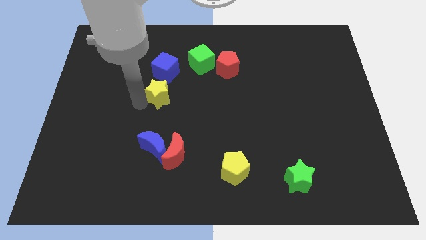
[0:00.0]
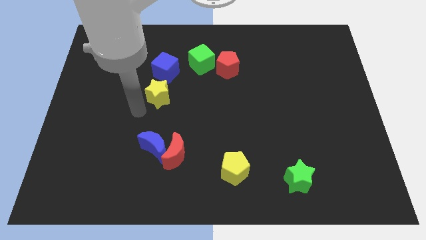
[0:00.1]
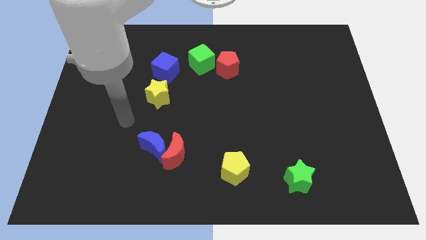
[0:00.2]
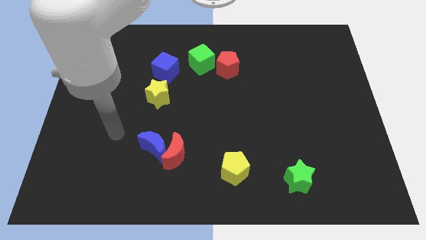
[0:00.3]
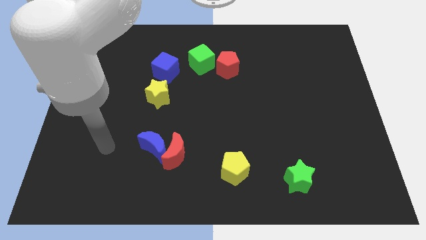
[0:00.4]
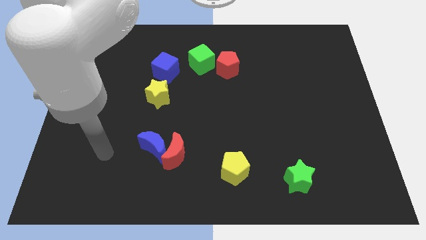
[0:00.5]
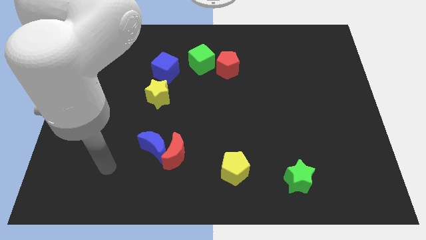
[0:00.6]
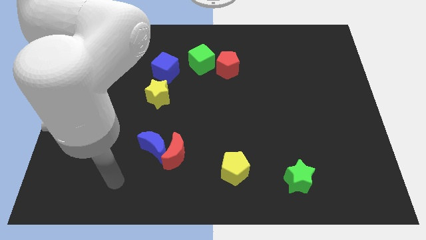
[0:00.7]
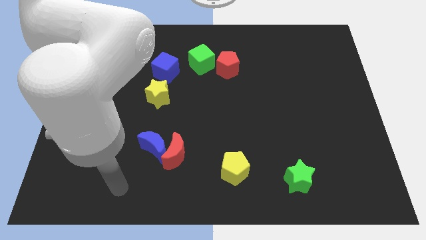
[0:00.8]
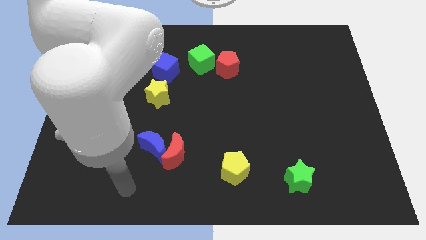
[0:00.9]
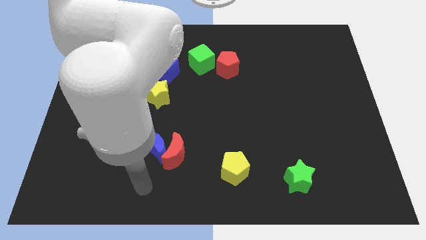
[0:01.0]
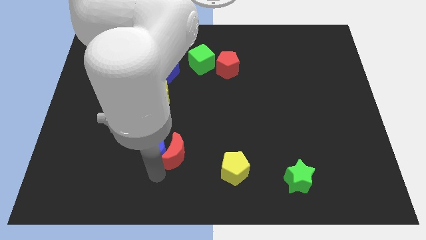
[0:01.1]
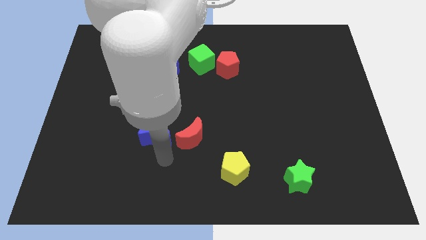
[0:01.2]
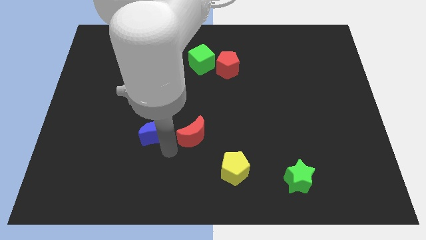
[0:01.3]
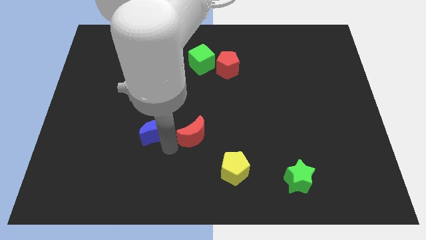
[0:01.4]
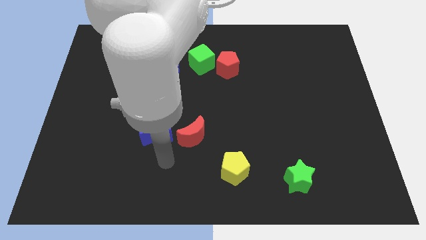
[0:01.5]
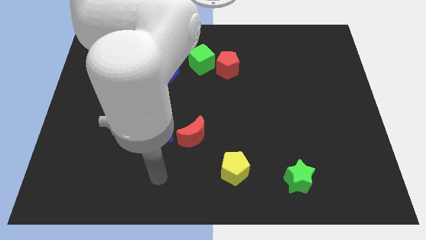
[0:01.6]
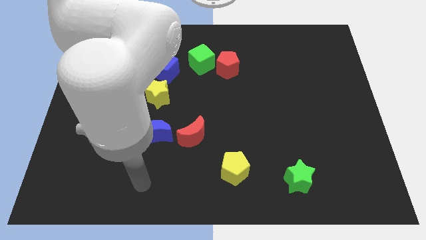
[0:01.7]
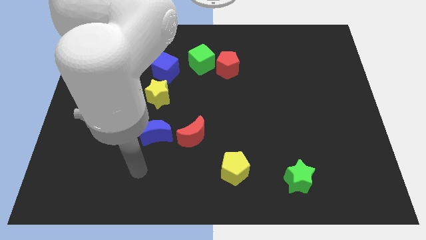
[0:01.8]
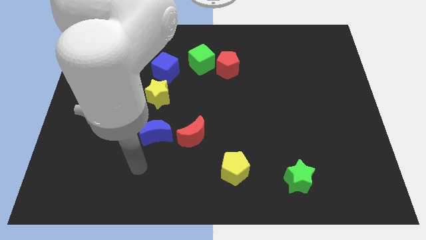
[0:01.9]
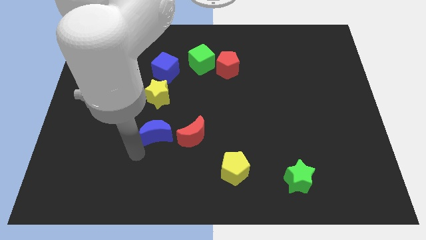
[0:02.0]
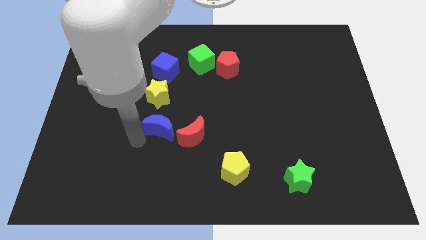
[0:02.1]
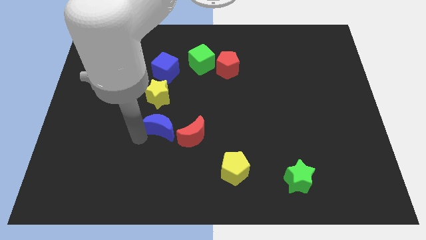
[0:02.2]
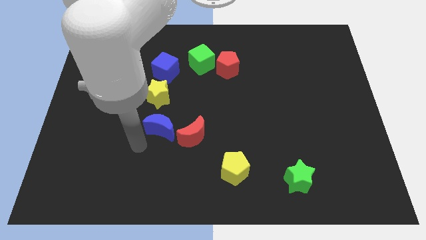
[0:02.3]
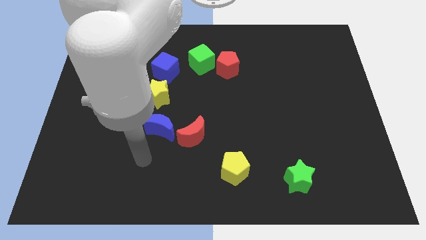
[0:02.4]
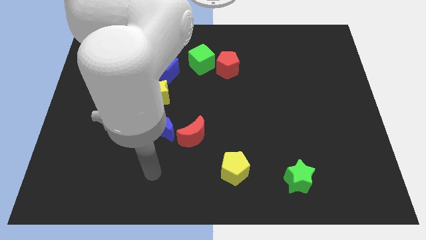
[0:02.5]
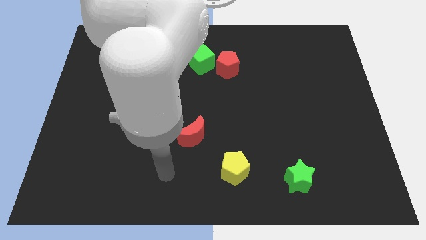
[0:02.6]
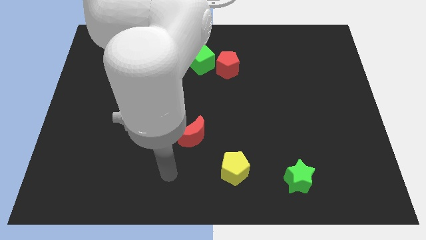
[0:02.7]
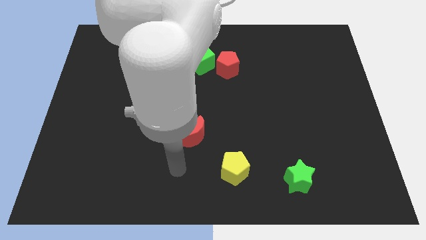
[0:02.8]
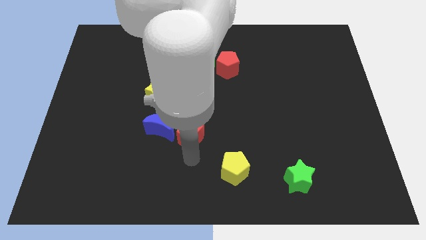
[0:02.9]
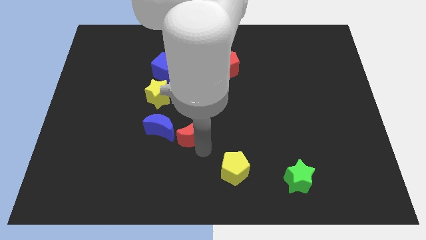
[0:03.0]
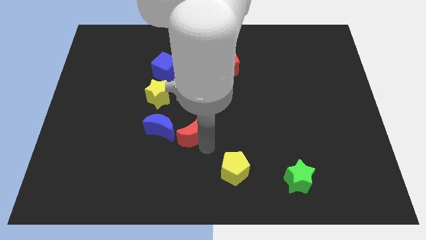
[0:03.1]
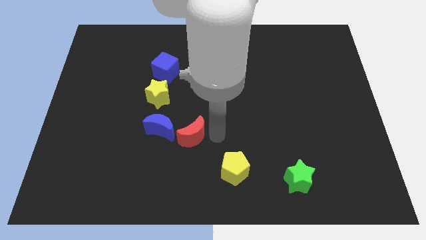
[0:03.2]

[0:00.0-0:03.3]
move the blue crescent slightly towards yellow star

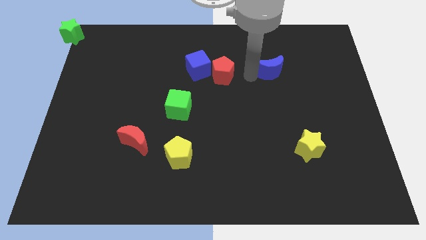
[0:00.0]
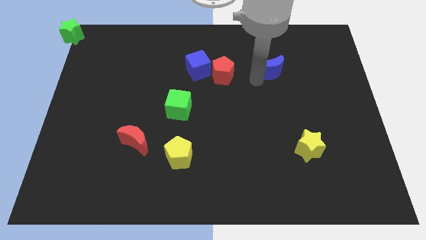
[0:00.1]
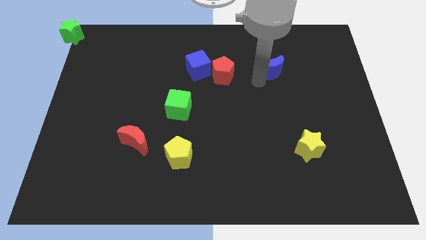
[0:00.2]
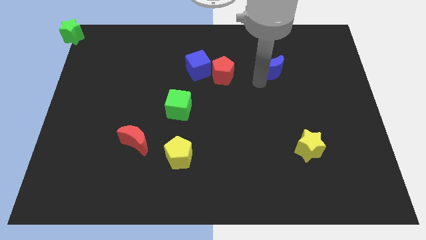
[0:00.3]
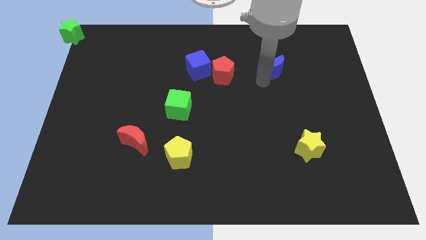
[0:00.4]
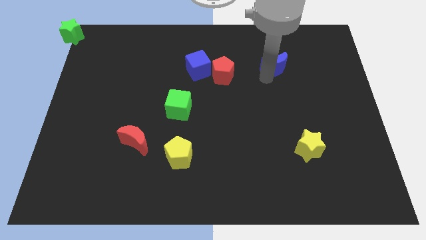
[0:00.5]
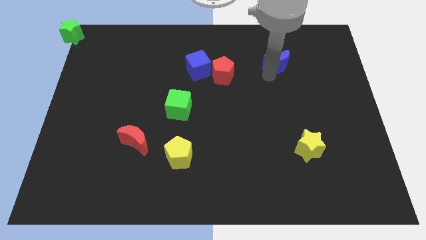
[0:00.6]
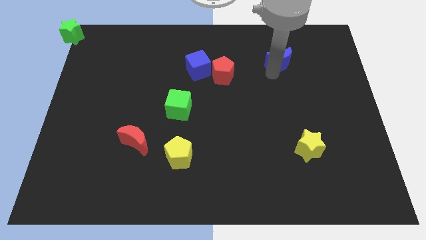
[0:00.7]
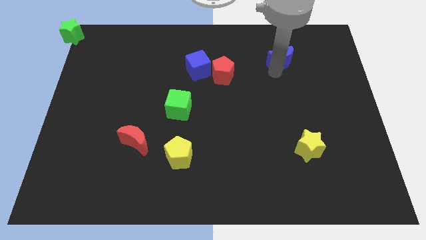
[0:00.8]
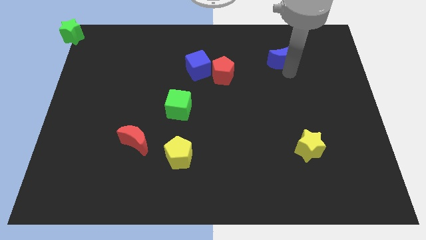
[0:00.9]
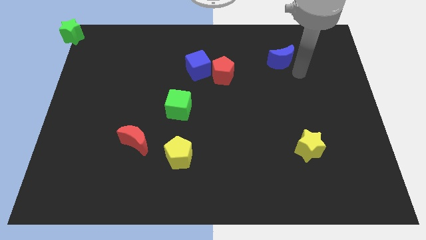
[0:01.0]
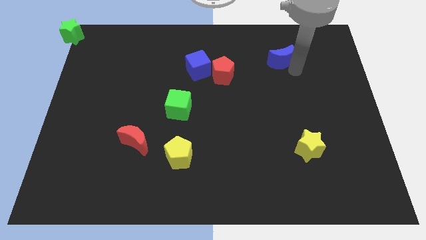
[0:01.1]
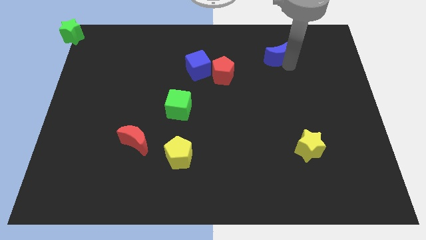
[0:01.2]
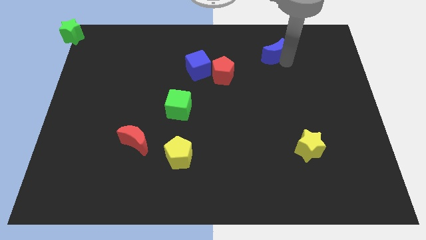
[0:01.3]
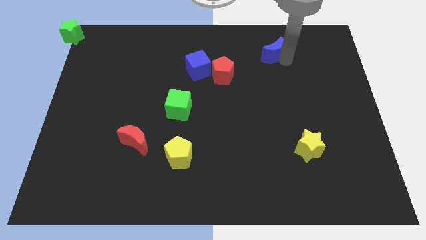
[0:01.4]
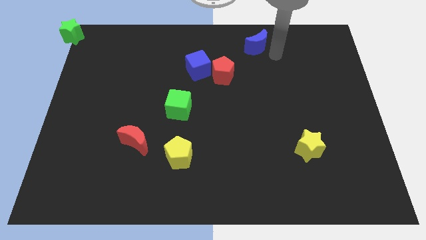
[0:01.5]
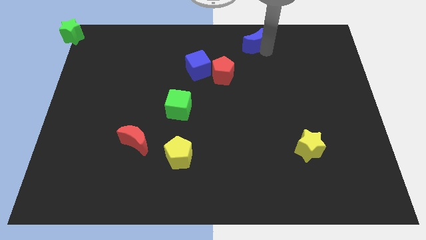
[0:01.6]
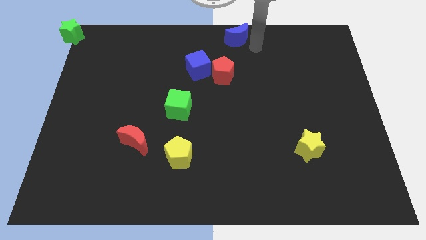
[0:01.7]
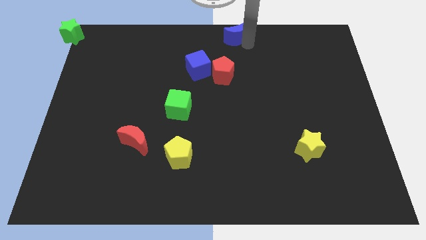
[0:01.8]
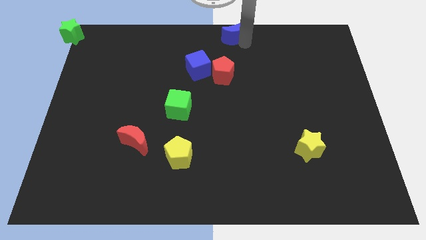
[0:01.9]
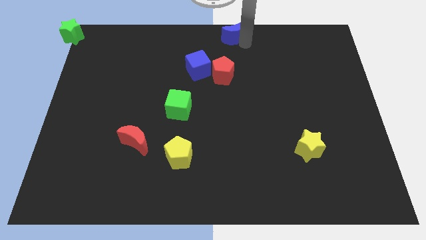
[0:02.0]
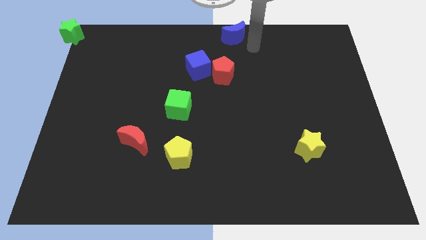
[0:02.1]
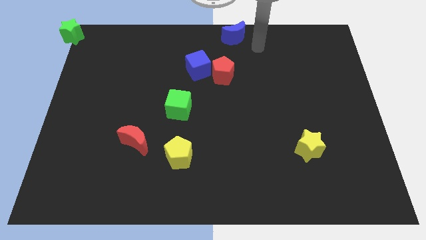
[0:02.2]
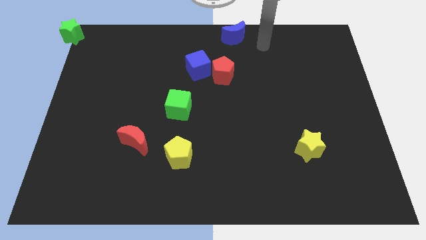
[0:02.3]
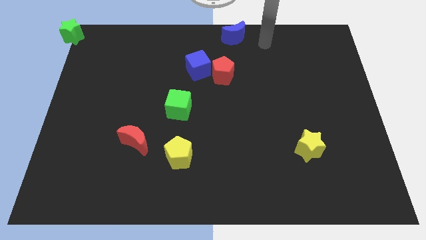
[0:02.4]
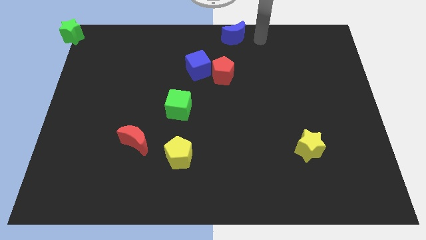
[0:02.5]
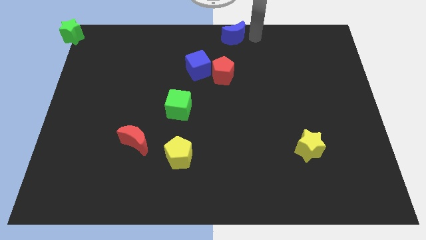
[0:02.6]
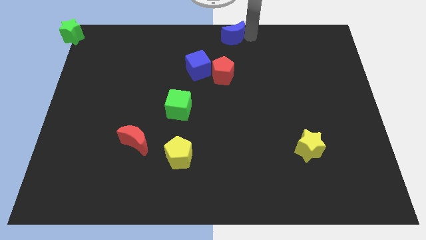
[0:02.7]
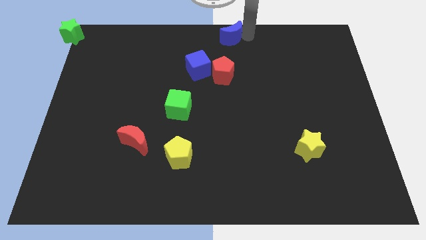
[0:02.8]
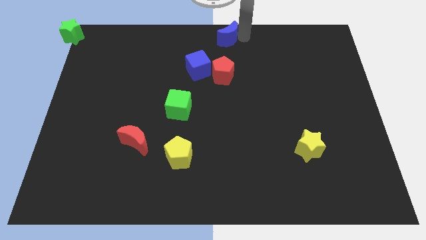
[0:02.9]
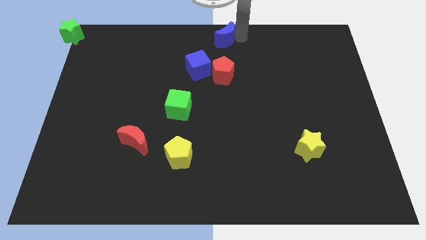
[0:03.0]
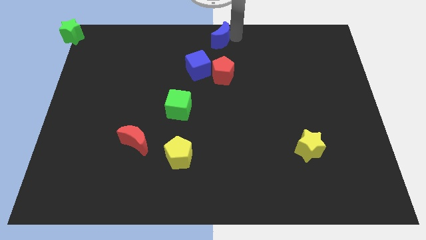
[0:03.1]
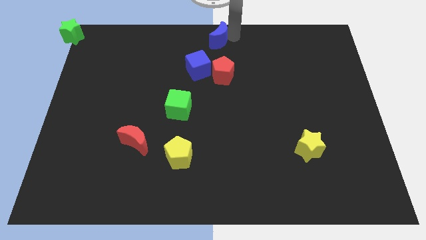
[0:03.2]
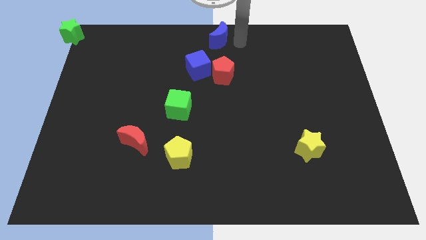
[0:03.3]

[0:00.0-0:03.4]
place the blue moon to the top center

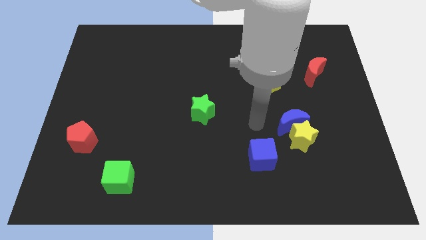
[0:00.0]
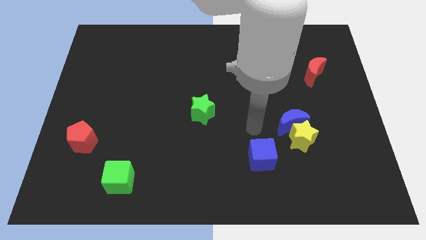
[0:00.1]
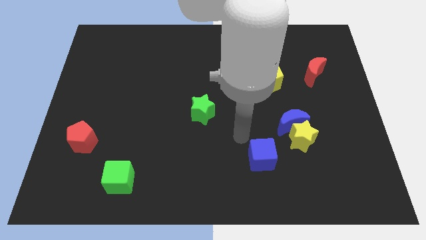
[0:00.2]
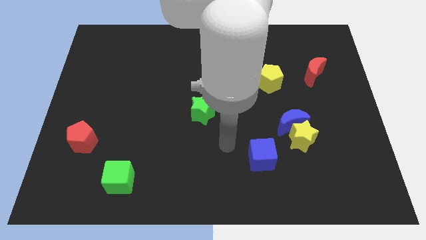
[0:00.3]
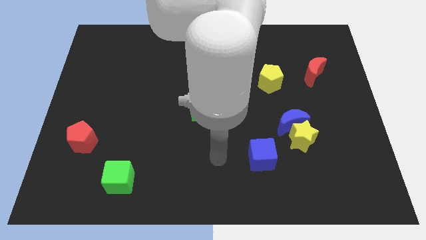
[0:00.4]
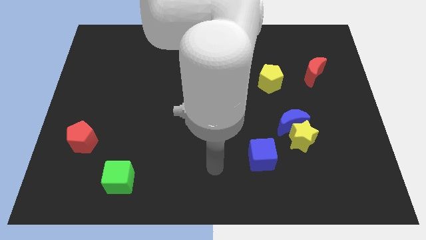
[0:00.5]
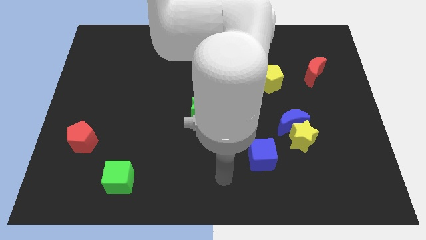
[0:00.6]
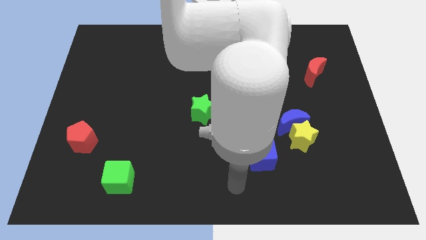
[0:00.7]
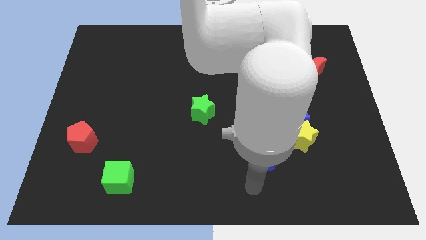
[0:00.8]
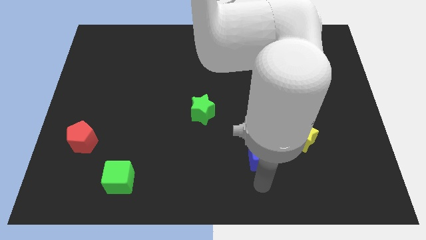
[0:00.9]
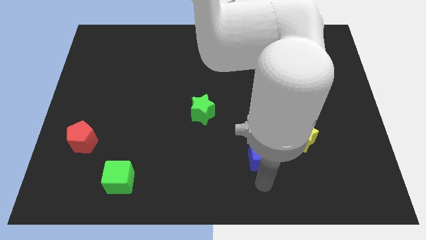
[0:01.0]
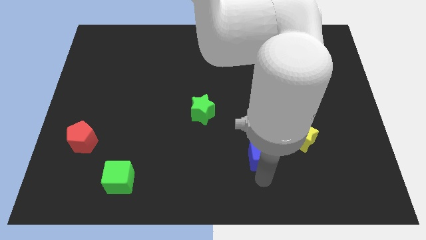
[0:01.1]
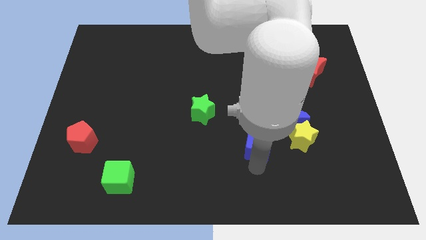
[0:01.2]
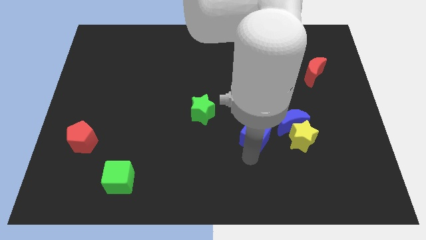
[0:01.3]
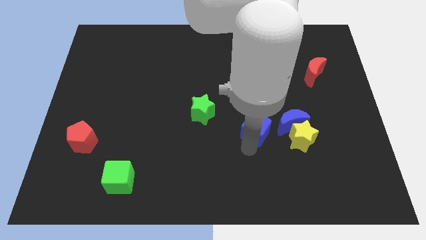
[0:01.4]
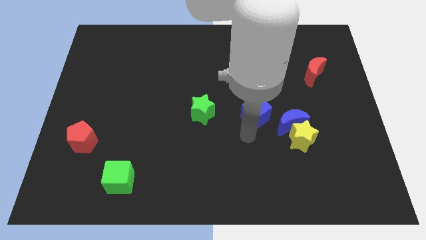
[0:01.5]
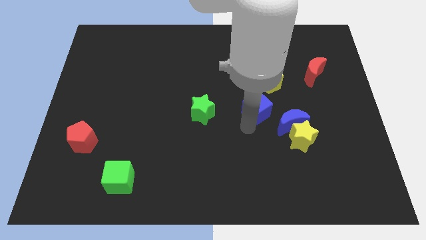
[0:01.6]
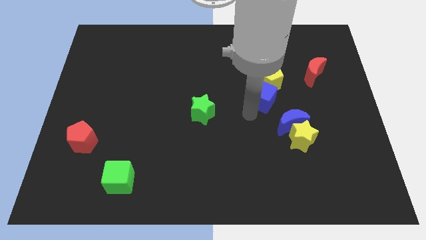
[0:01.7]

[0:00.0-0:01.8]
move the blue cube into the yellow pentagon

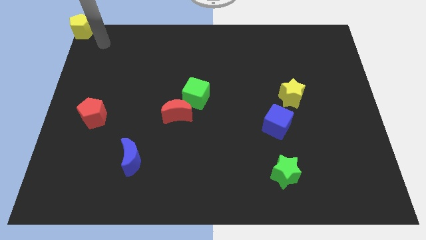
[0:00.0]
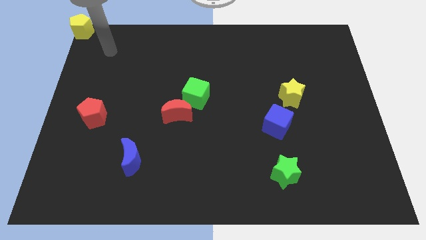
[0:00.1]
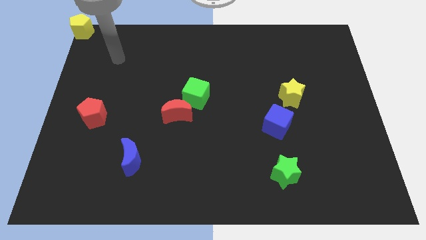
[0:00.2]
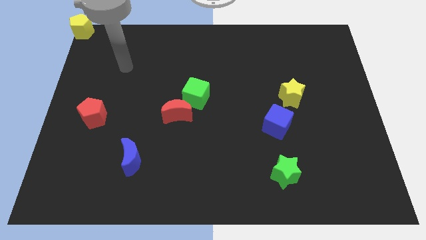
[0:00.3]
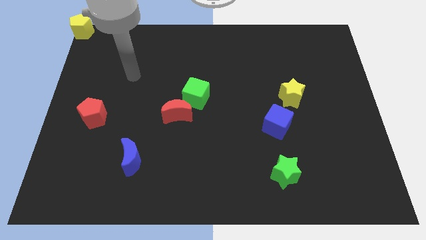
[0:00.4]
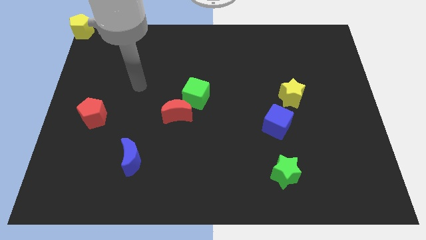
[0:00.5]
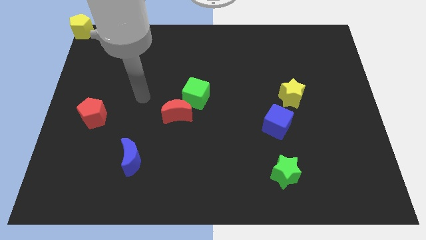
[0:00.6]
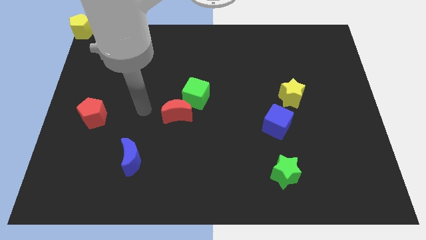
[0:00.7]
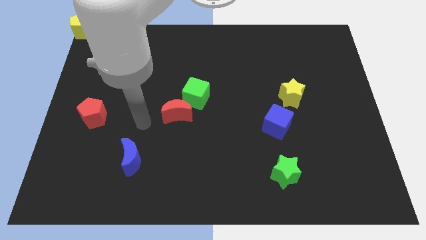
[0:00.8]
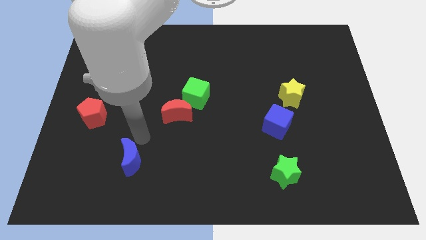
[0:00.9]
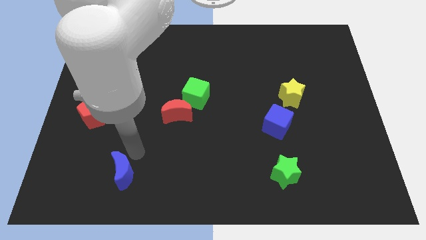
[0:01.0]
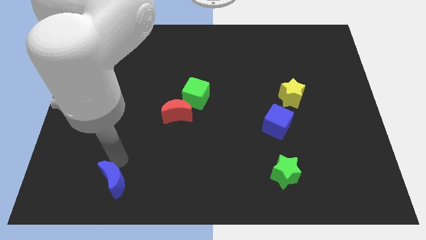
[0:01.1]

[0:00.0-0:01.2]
move your amt to the top right of the blue crescent
